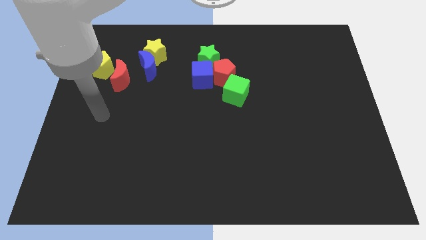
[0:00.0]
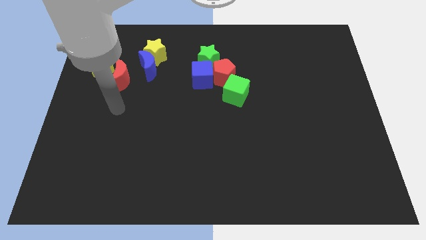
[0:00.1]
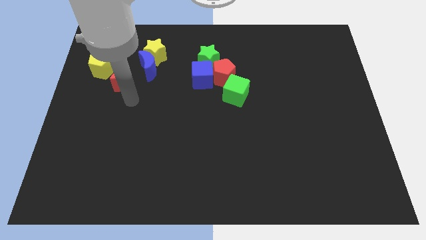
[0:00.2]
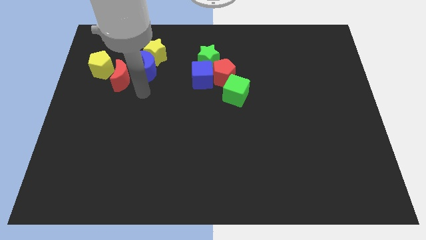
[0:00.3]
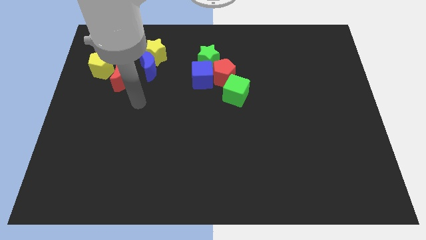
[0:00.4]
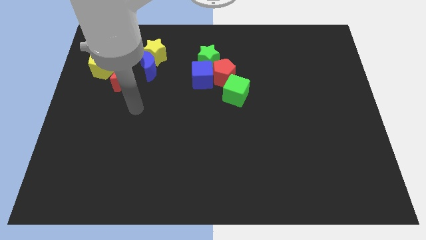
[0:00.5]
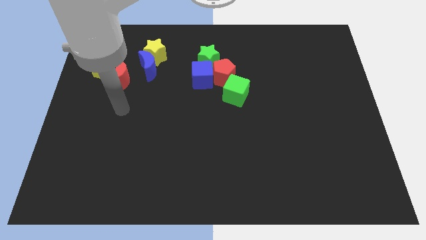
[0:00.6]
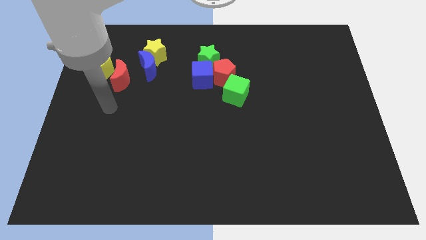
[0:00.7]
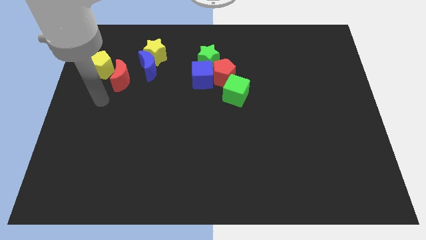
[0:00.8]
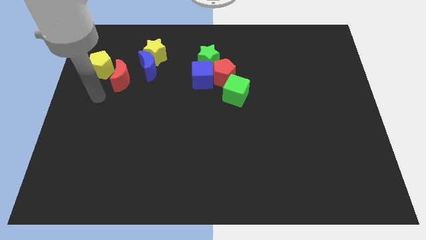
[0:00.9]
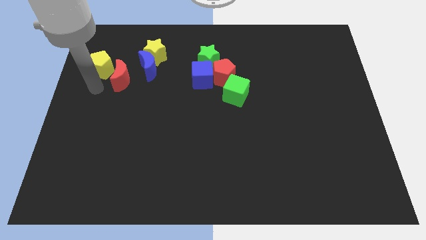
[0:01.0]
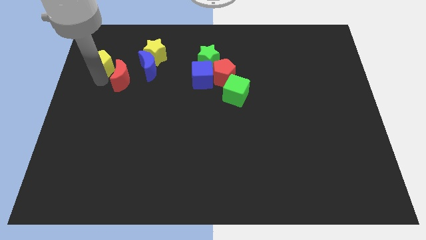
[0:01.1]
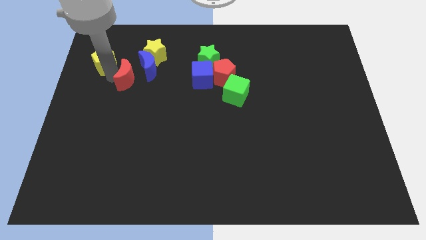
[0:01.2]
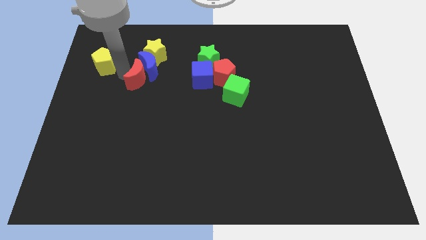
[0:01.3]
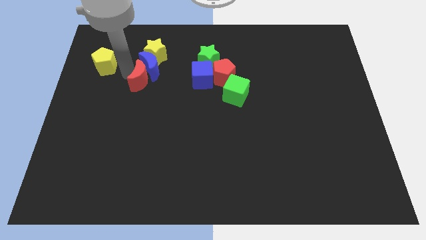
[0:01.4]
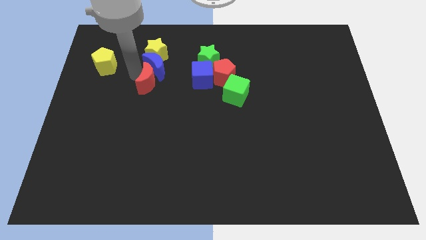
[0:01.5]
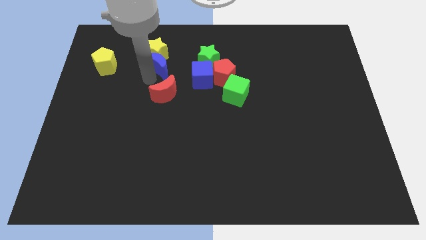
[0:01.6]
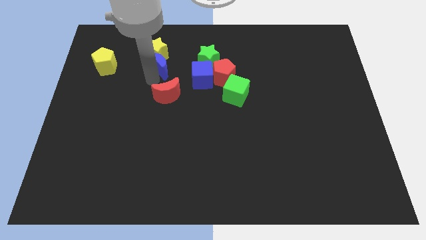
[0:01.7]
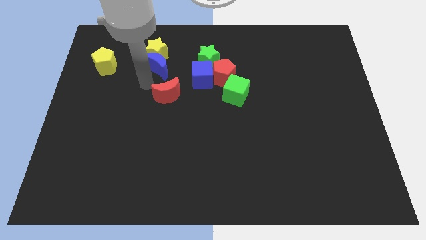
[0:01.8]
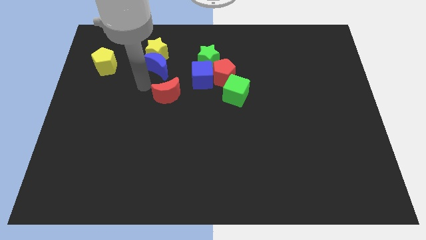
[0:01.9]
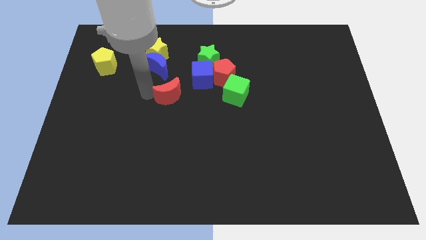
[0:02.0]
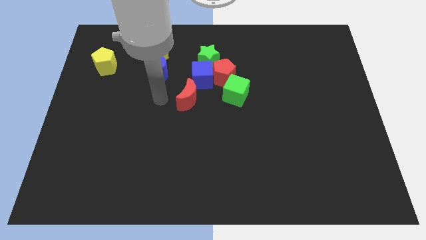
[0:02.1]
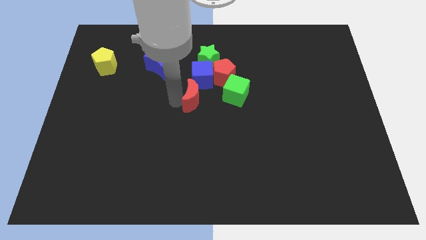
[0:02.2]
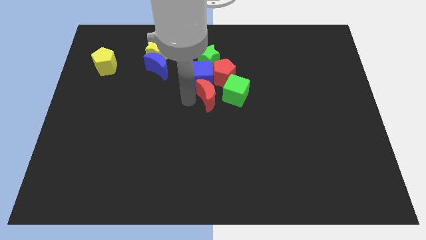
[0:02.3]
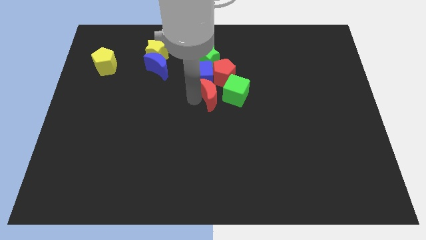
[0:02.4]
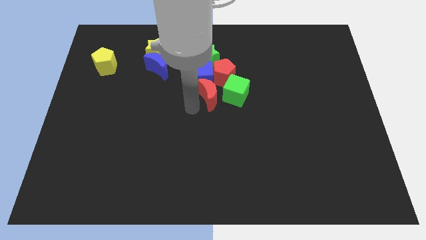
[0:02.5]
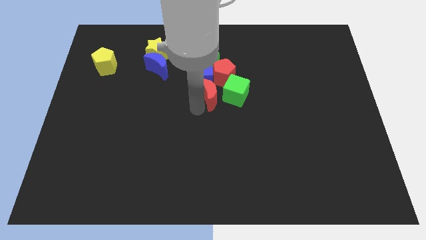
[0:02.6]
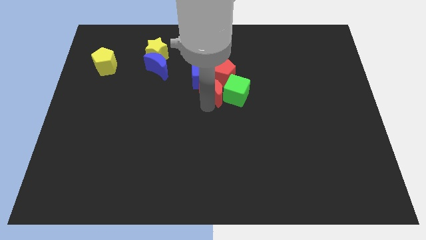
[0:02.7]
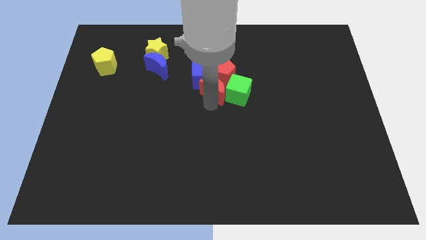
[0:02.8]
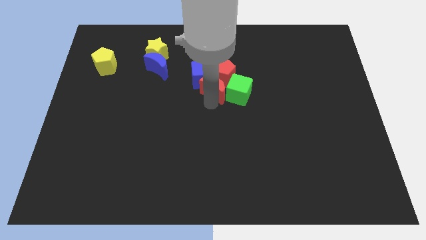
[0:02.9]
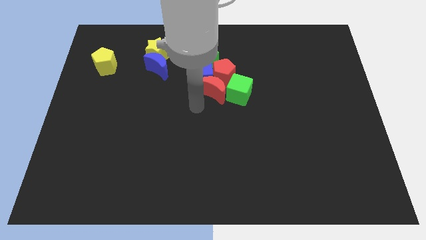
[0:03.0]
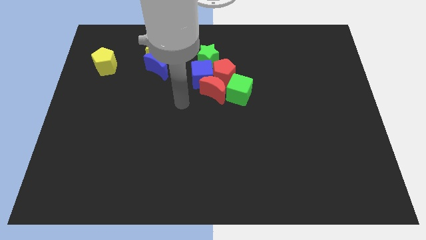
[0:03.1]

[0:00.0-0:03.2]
push the red moon in between the green cube and blue cube

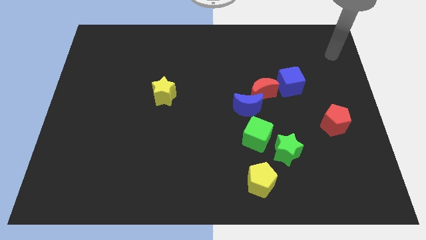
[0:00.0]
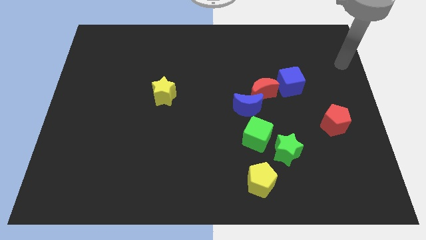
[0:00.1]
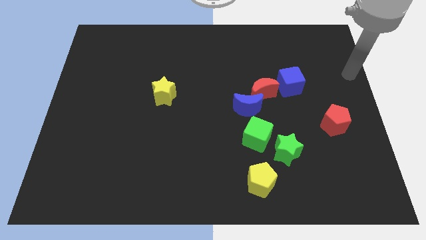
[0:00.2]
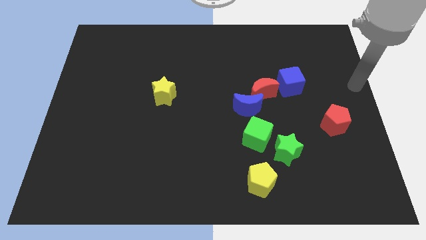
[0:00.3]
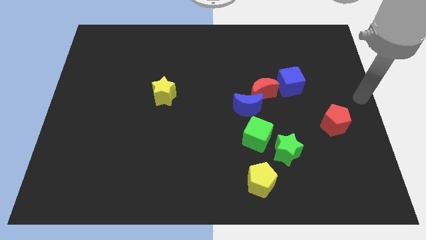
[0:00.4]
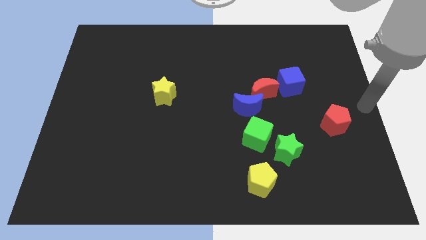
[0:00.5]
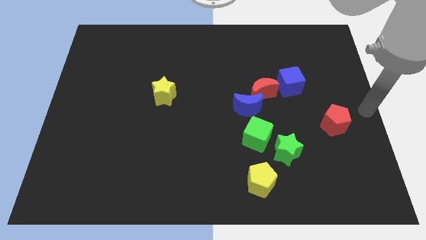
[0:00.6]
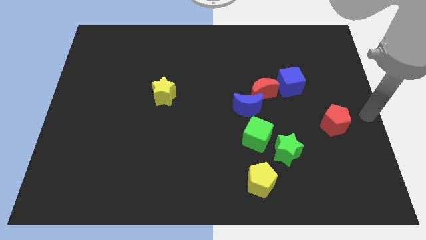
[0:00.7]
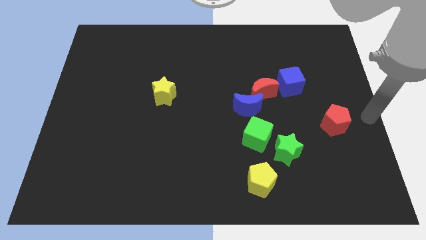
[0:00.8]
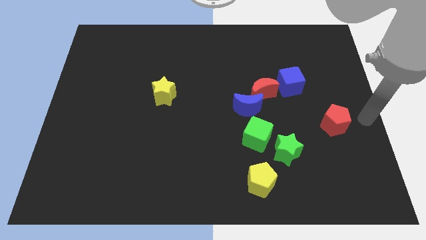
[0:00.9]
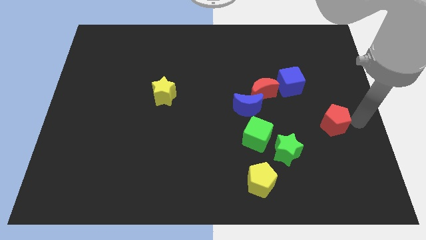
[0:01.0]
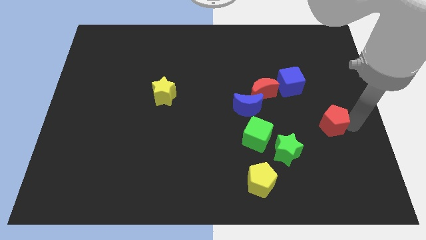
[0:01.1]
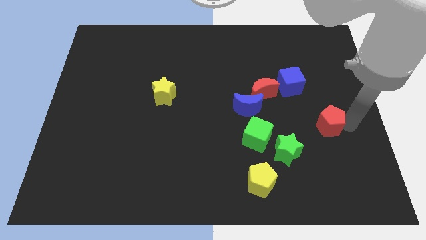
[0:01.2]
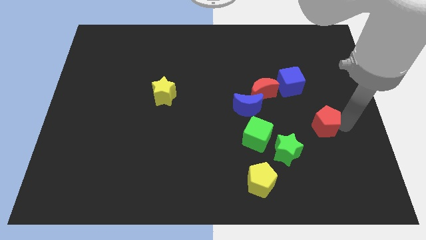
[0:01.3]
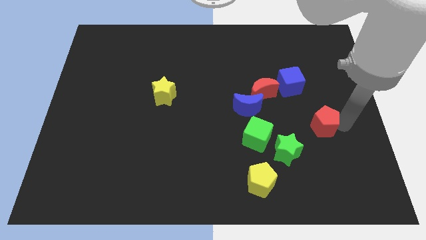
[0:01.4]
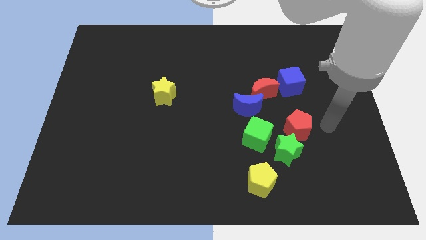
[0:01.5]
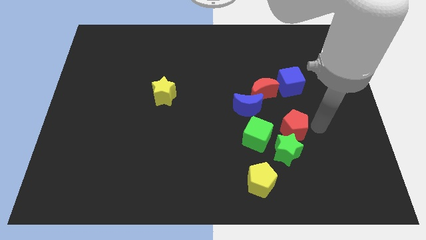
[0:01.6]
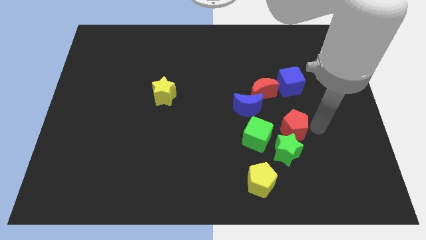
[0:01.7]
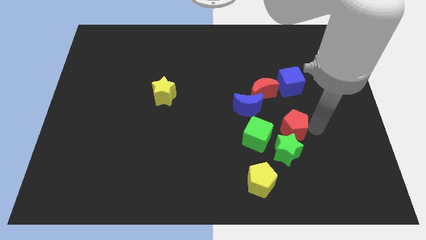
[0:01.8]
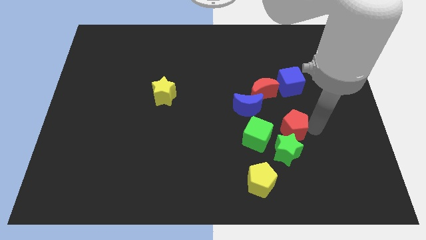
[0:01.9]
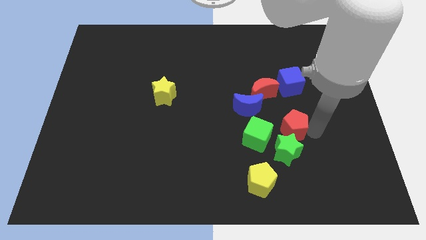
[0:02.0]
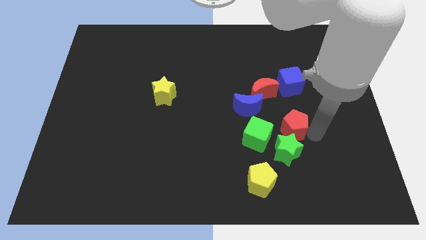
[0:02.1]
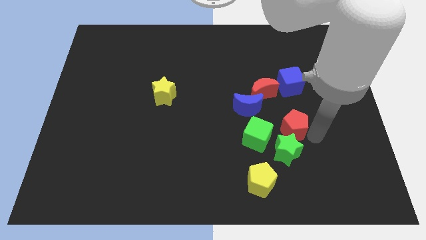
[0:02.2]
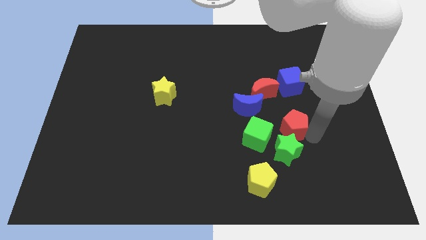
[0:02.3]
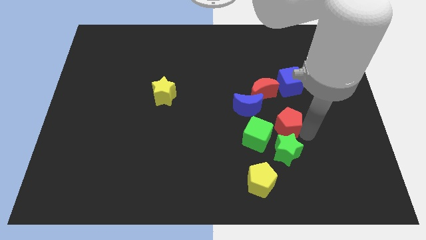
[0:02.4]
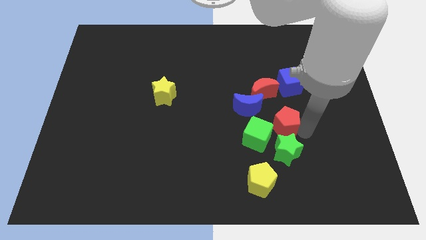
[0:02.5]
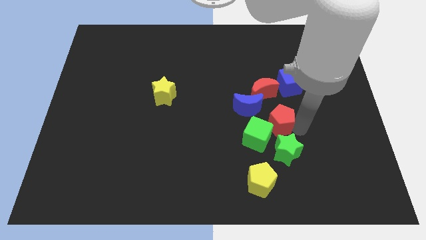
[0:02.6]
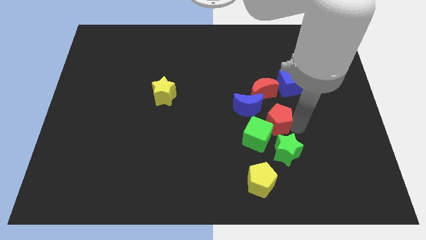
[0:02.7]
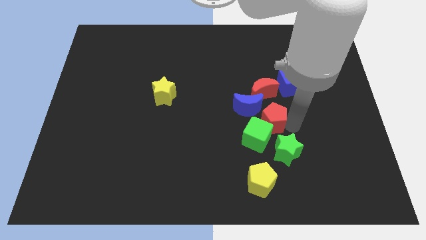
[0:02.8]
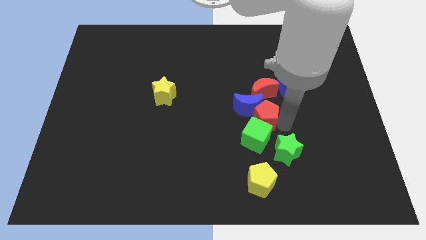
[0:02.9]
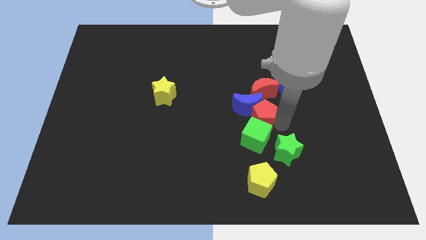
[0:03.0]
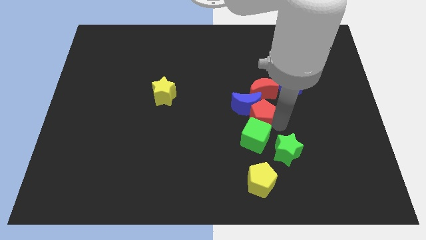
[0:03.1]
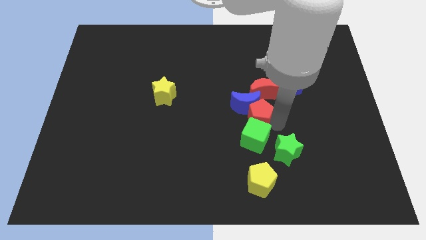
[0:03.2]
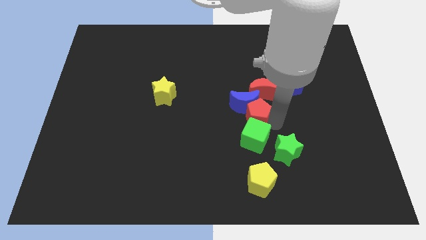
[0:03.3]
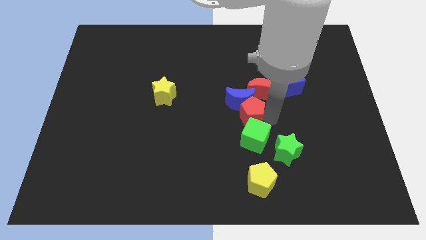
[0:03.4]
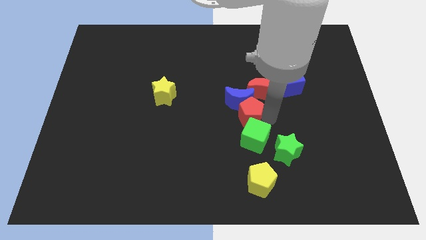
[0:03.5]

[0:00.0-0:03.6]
push red pentagon in between green cube and blue moon

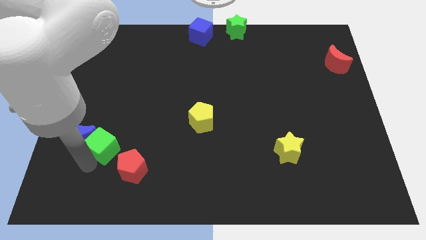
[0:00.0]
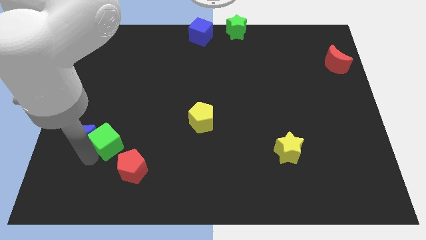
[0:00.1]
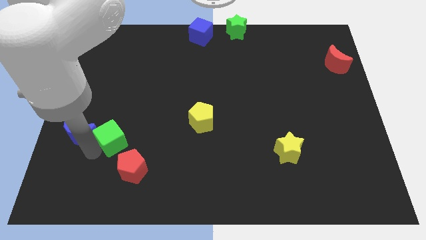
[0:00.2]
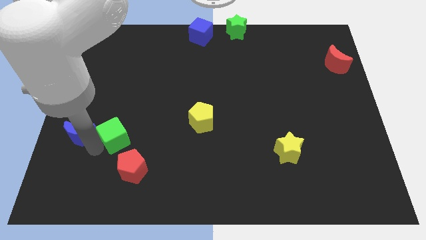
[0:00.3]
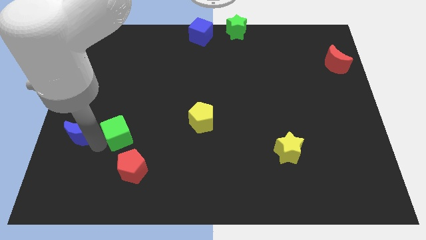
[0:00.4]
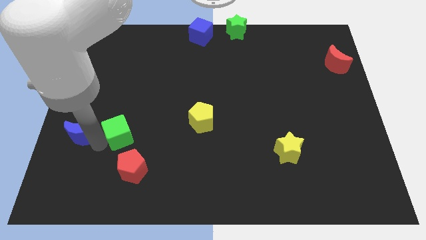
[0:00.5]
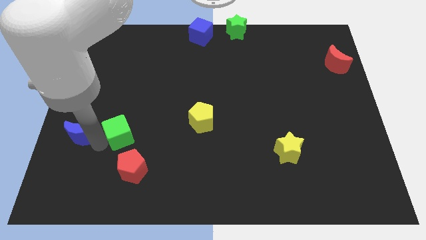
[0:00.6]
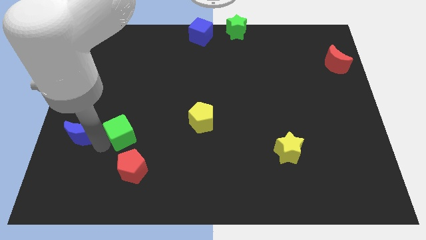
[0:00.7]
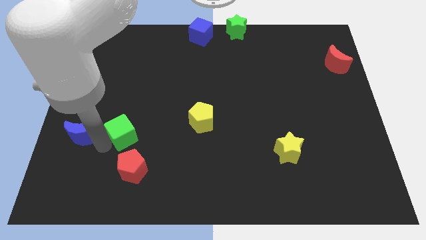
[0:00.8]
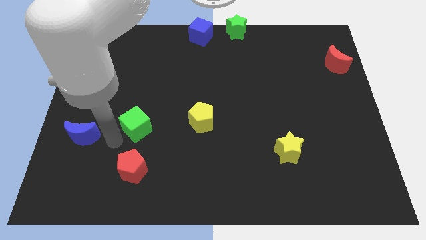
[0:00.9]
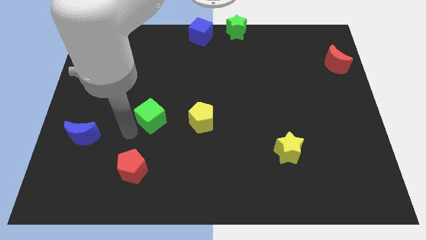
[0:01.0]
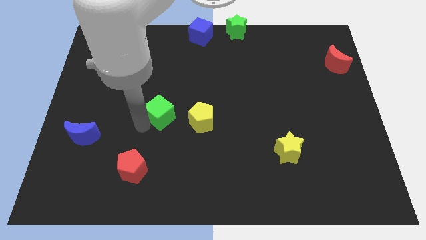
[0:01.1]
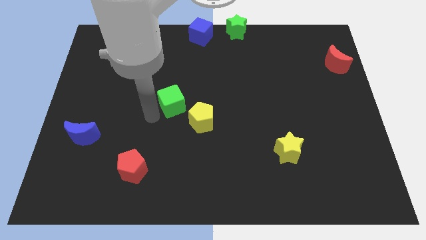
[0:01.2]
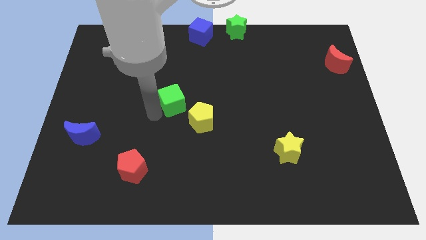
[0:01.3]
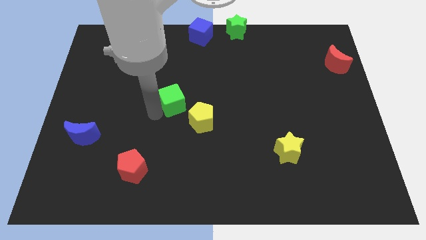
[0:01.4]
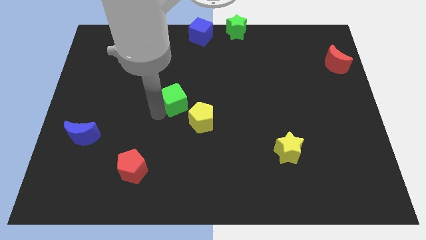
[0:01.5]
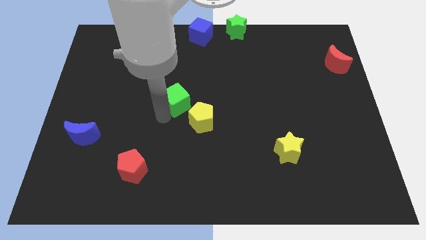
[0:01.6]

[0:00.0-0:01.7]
put the green cube diagonally top left to the yellow pentagon

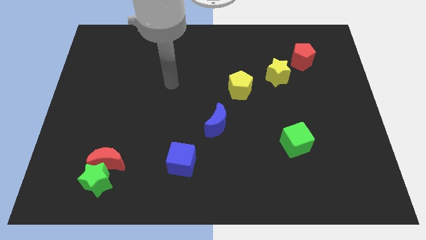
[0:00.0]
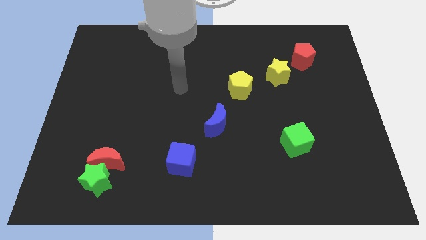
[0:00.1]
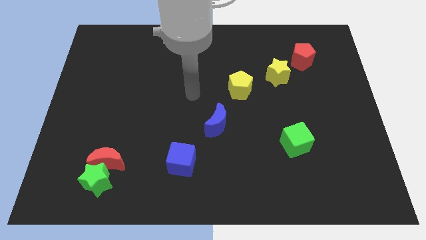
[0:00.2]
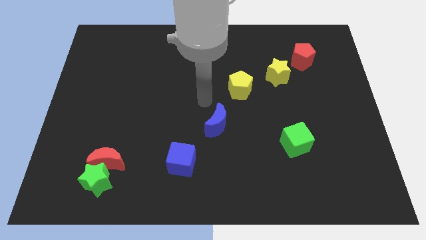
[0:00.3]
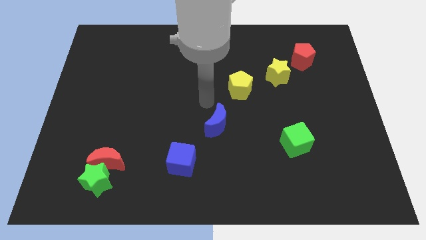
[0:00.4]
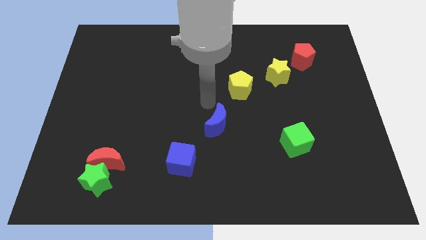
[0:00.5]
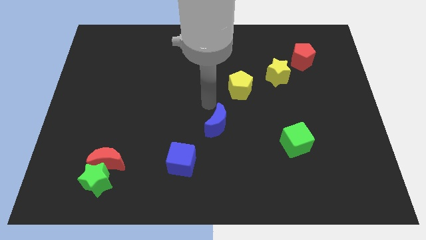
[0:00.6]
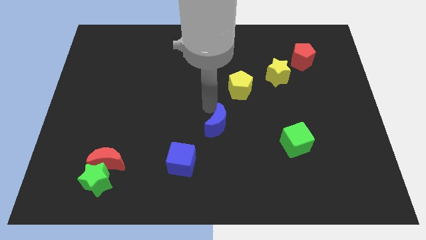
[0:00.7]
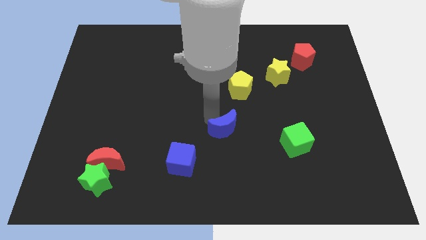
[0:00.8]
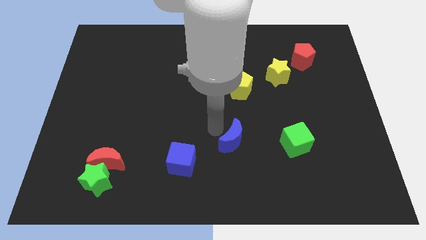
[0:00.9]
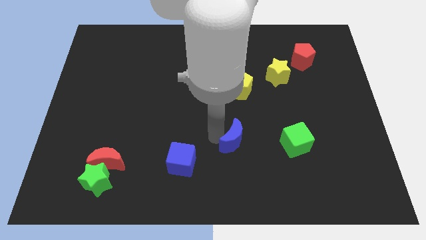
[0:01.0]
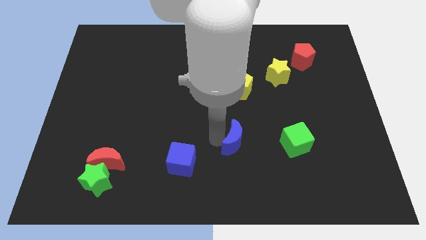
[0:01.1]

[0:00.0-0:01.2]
move the blue moon slightly down
